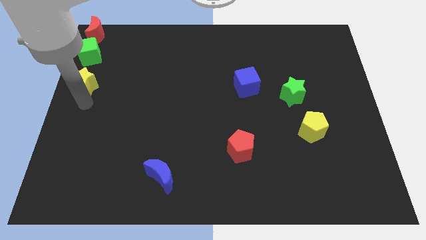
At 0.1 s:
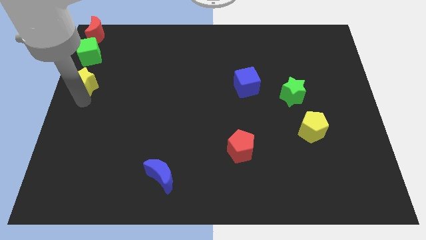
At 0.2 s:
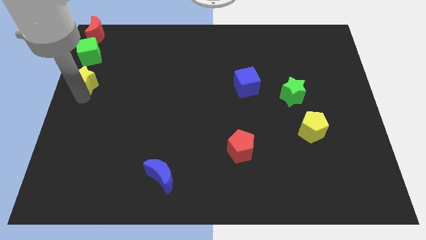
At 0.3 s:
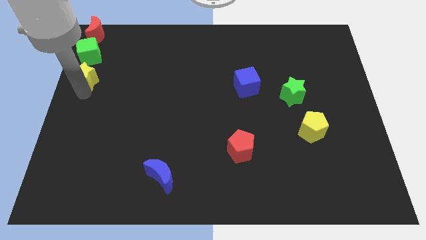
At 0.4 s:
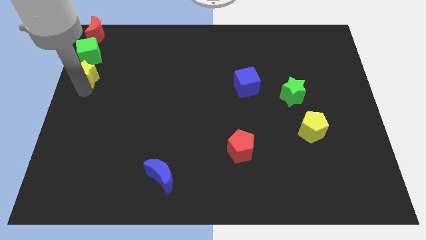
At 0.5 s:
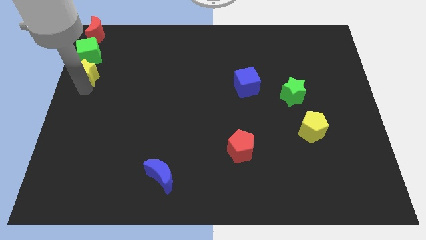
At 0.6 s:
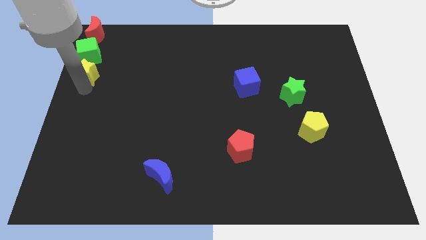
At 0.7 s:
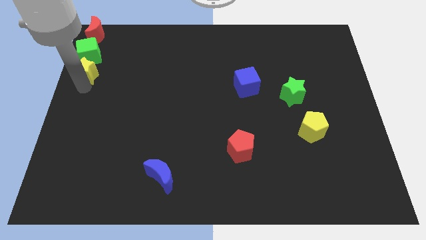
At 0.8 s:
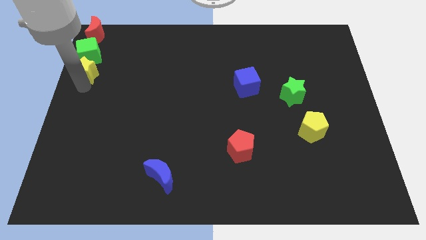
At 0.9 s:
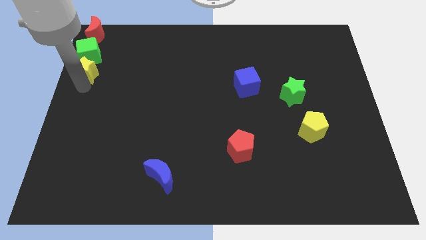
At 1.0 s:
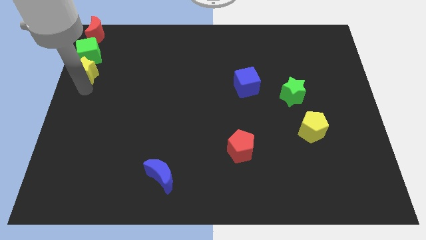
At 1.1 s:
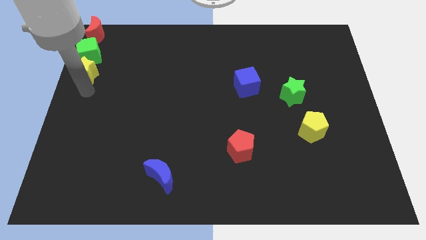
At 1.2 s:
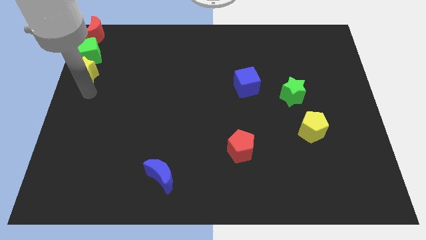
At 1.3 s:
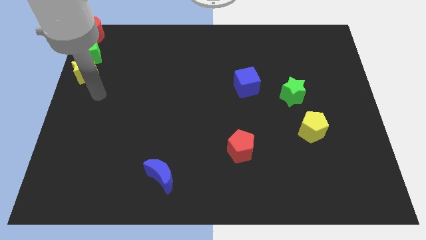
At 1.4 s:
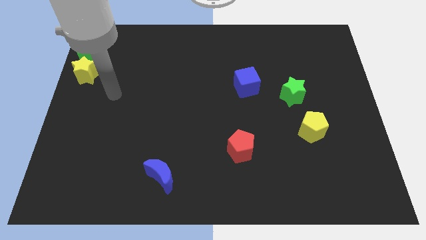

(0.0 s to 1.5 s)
push the yellow star and place it below the green cube

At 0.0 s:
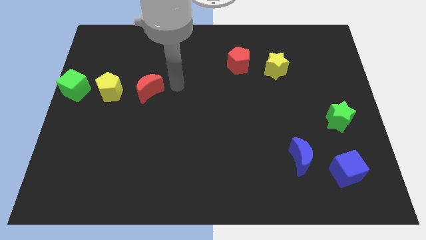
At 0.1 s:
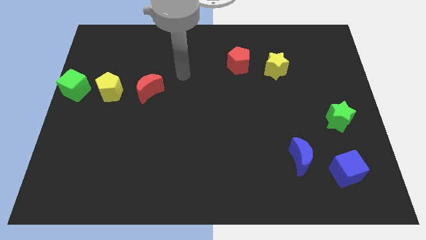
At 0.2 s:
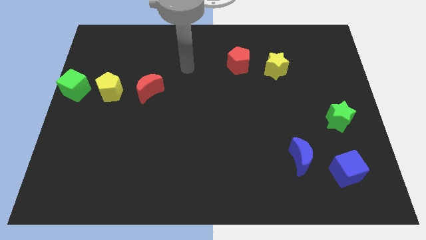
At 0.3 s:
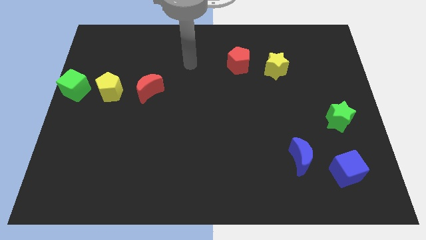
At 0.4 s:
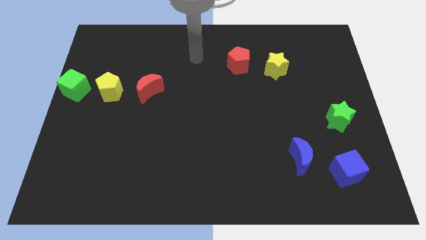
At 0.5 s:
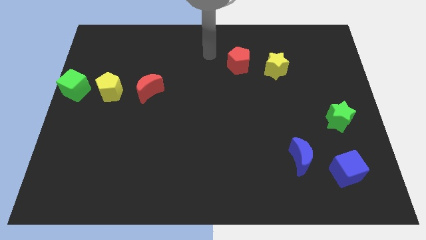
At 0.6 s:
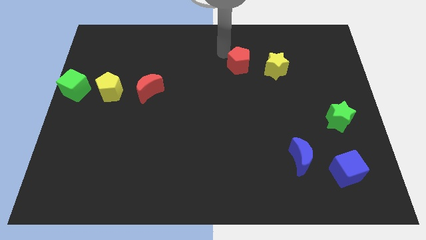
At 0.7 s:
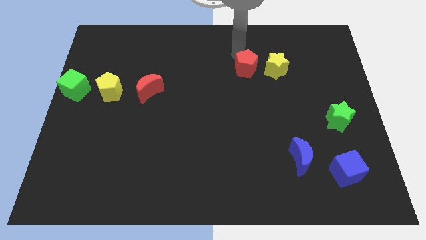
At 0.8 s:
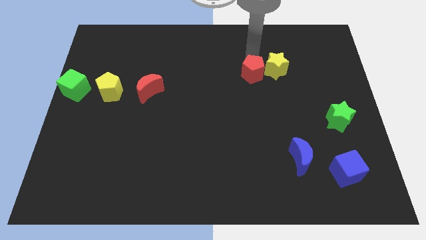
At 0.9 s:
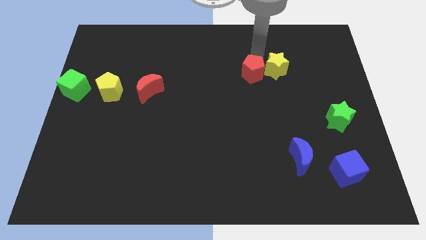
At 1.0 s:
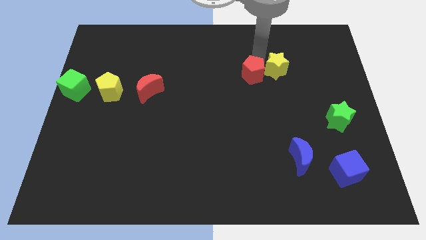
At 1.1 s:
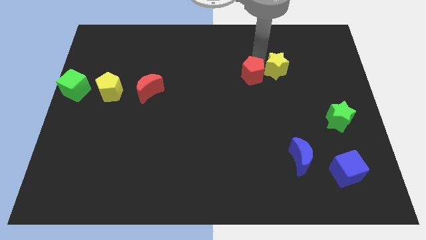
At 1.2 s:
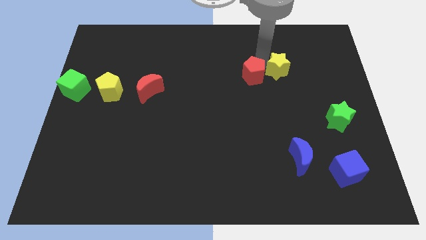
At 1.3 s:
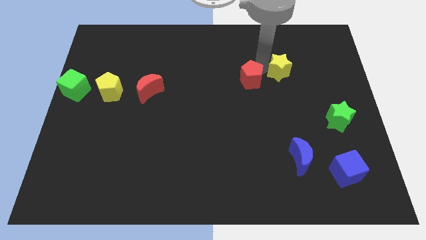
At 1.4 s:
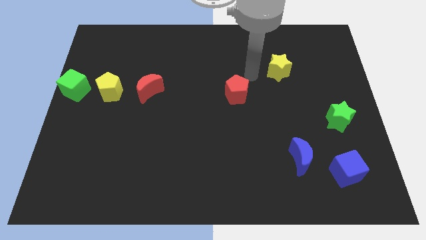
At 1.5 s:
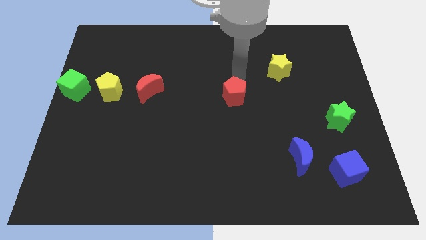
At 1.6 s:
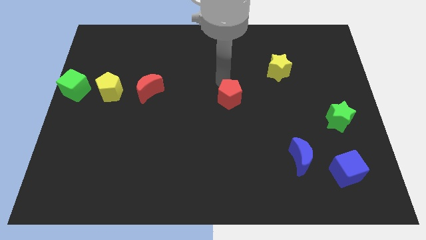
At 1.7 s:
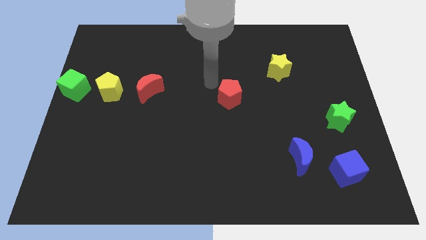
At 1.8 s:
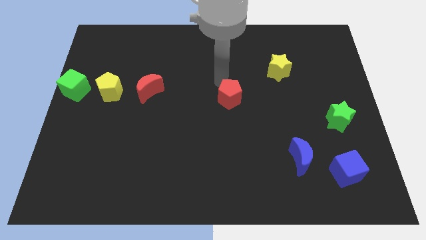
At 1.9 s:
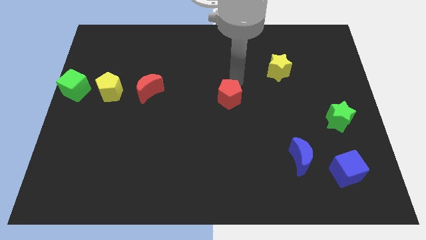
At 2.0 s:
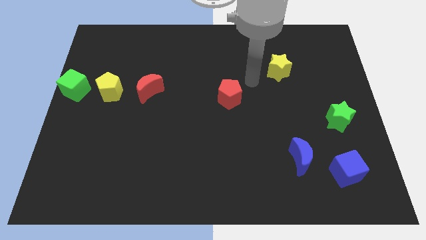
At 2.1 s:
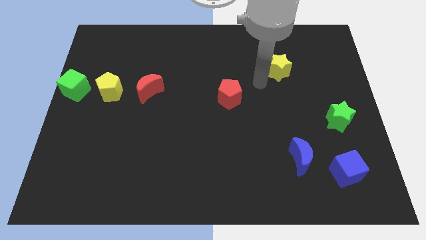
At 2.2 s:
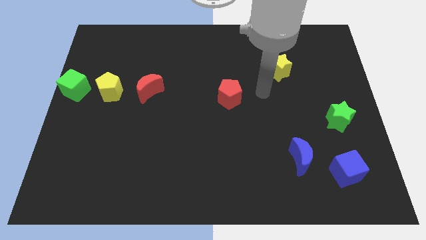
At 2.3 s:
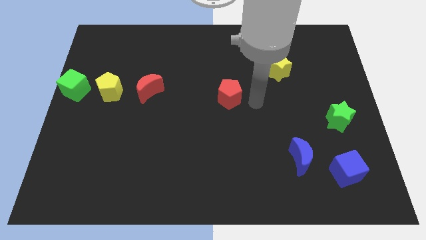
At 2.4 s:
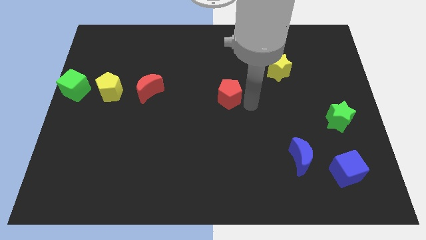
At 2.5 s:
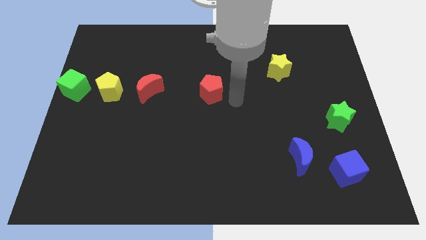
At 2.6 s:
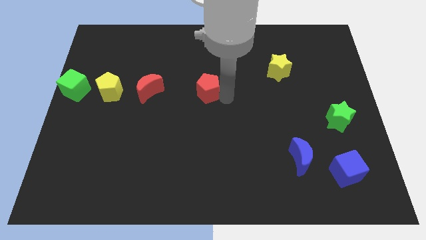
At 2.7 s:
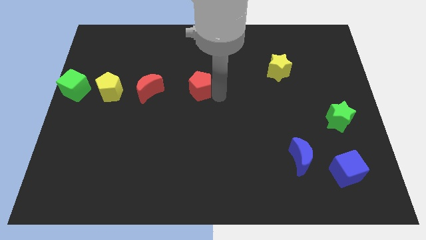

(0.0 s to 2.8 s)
put the red pentagon at the center of the board

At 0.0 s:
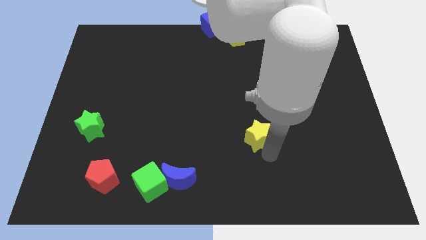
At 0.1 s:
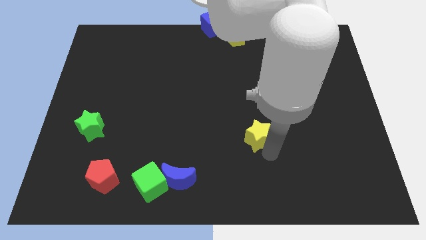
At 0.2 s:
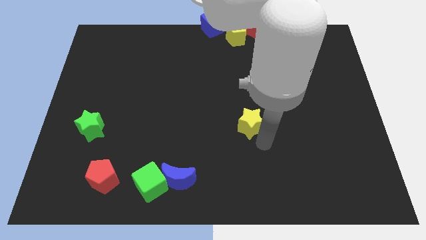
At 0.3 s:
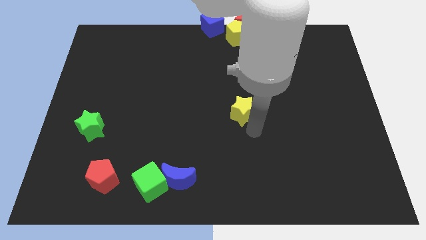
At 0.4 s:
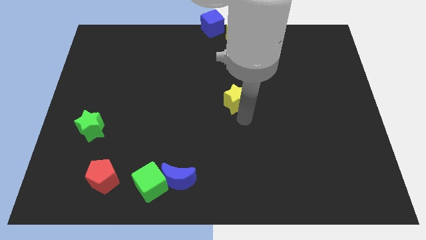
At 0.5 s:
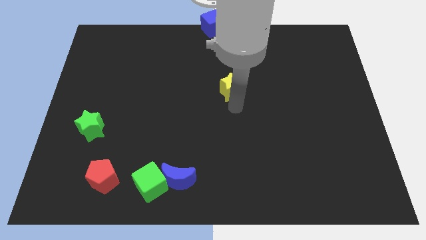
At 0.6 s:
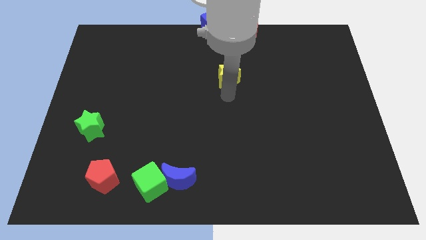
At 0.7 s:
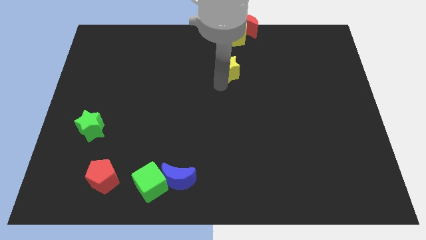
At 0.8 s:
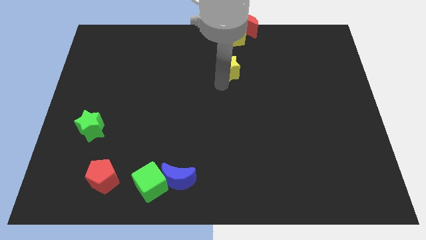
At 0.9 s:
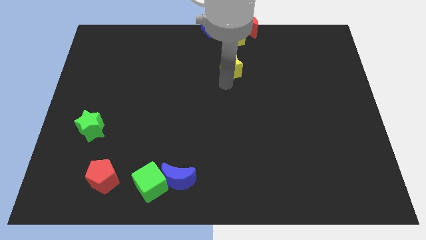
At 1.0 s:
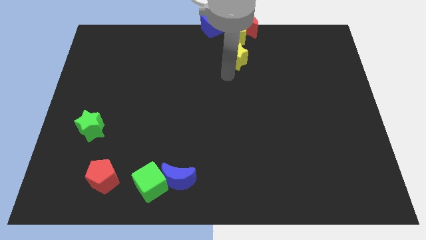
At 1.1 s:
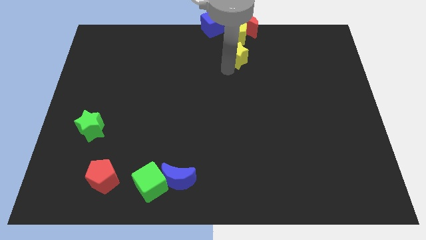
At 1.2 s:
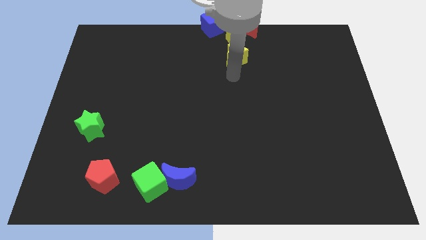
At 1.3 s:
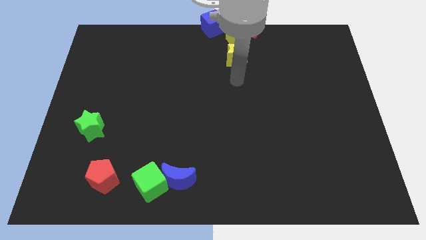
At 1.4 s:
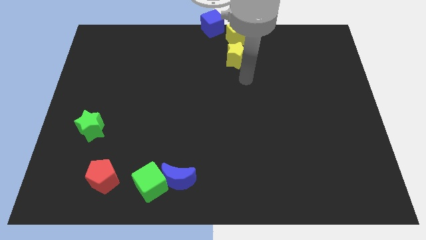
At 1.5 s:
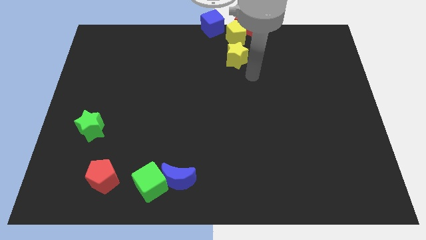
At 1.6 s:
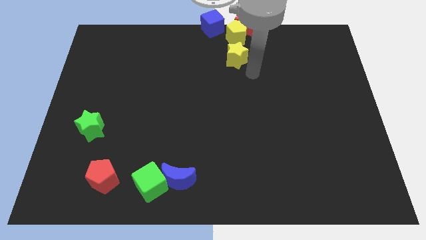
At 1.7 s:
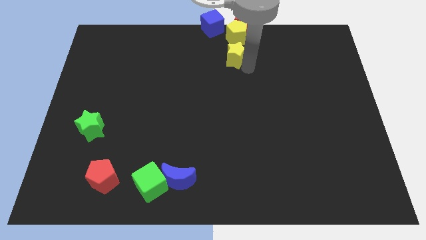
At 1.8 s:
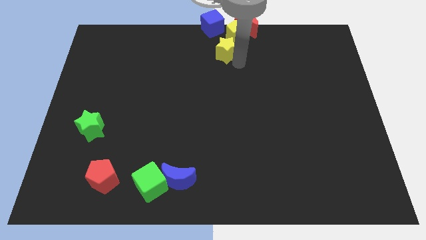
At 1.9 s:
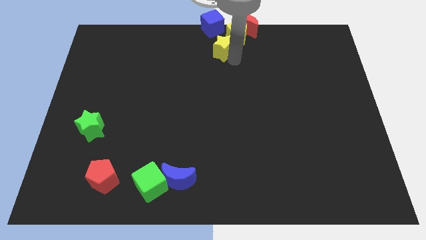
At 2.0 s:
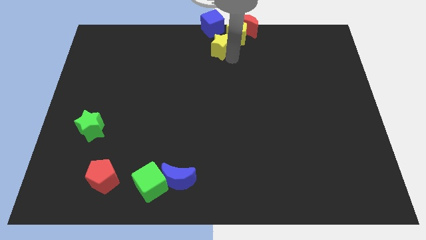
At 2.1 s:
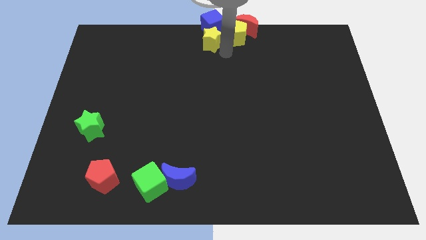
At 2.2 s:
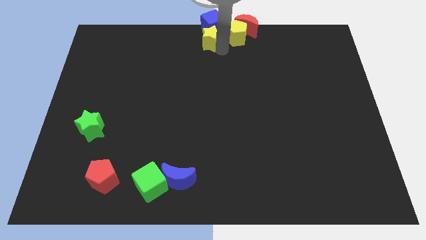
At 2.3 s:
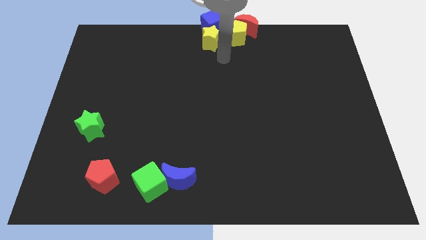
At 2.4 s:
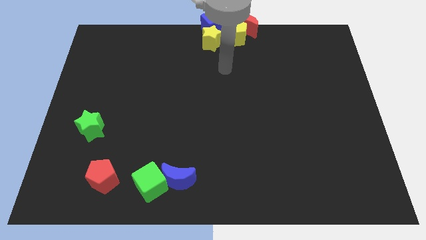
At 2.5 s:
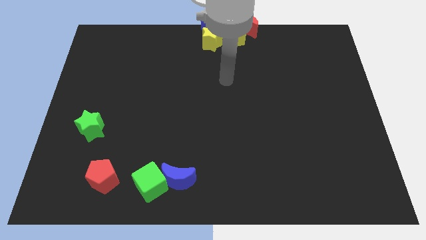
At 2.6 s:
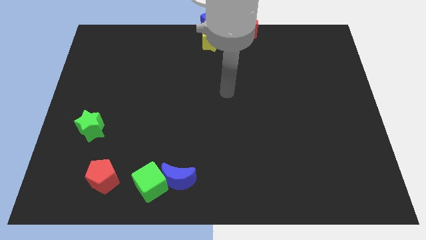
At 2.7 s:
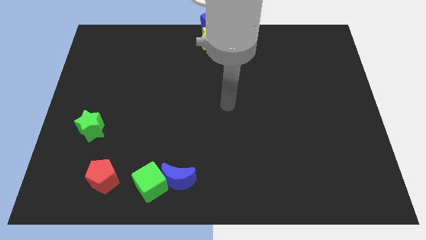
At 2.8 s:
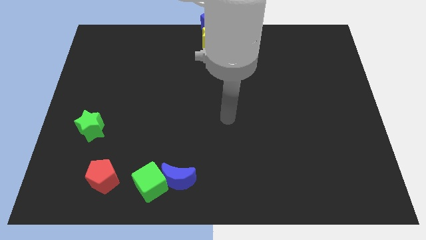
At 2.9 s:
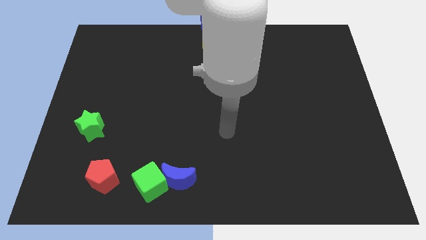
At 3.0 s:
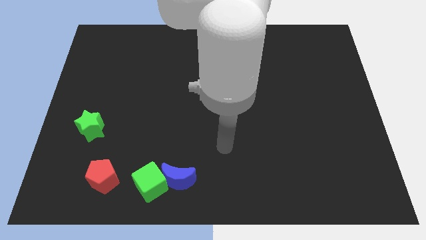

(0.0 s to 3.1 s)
place the yellow star down to the blue cube

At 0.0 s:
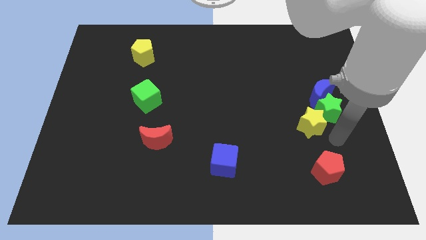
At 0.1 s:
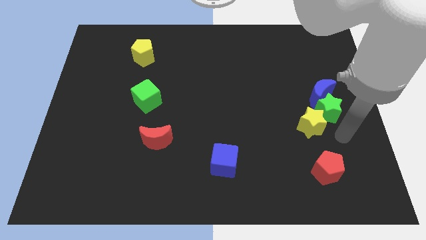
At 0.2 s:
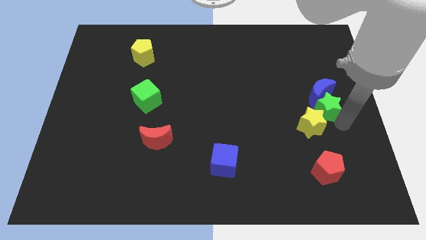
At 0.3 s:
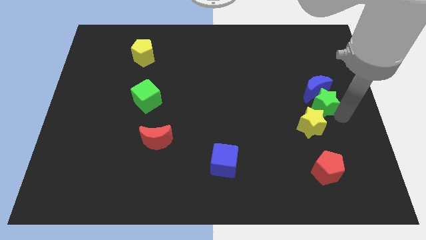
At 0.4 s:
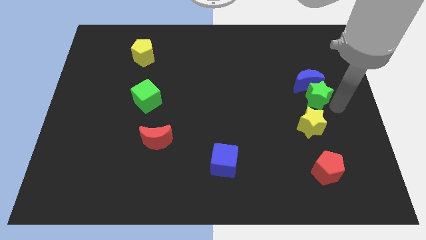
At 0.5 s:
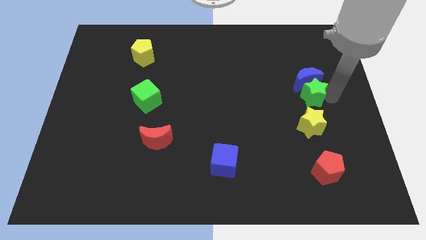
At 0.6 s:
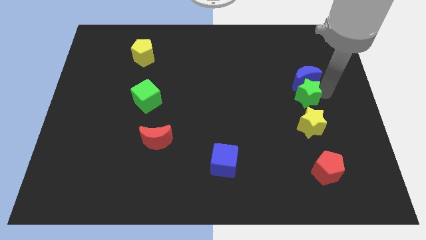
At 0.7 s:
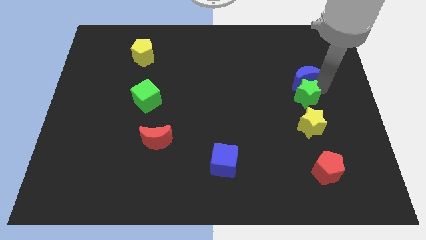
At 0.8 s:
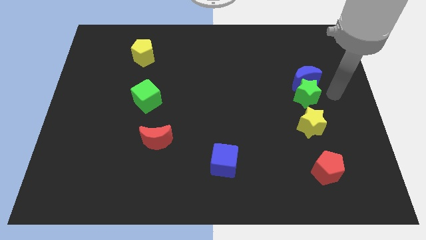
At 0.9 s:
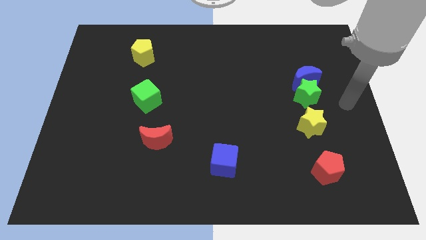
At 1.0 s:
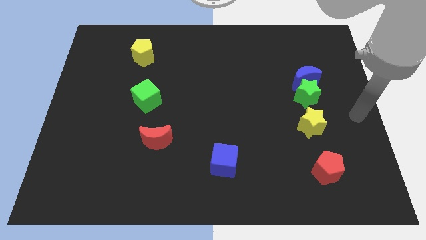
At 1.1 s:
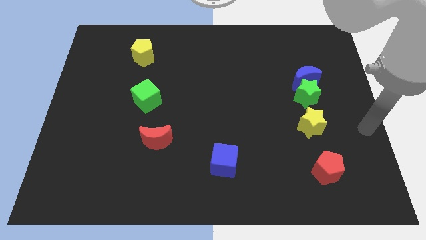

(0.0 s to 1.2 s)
move the green star down to the blue moon

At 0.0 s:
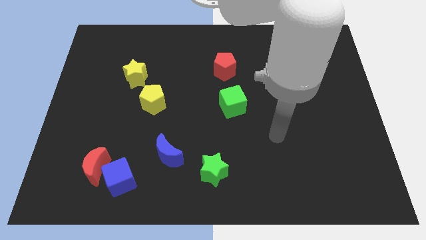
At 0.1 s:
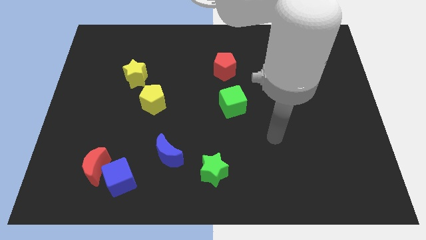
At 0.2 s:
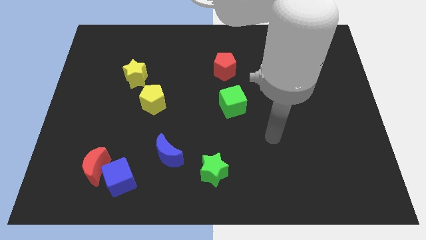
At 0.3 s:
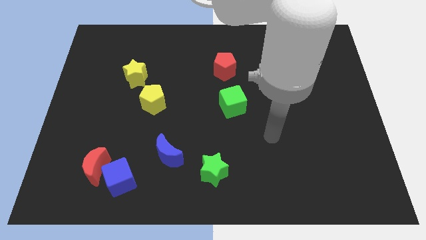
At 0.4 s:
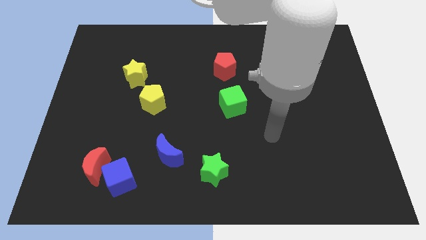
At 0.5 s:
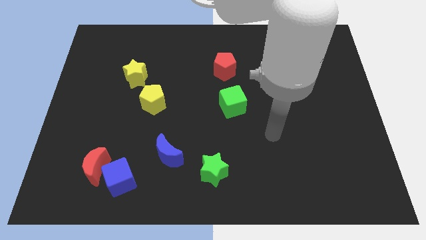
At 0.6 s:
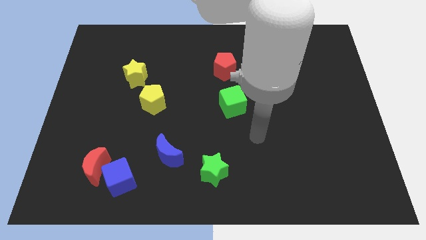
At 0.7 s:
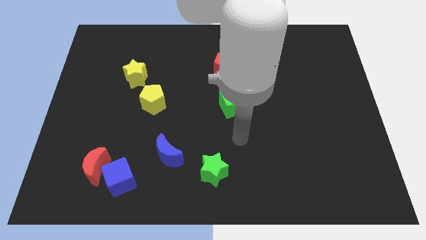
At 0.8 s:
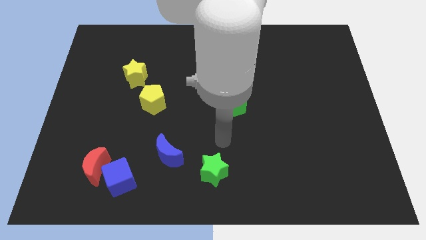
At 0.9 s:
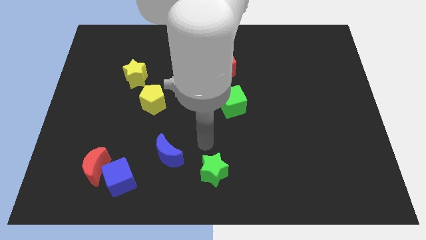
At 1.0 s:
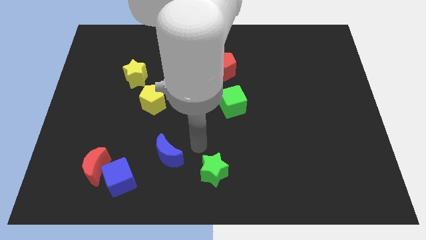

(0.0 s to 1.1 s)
point your arm at the top of the green star
